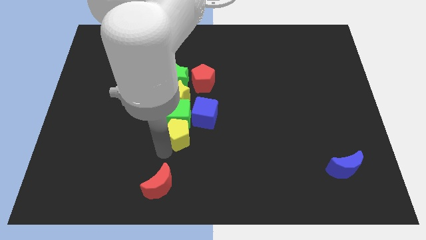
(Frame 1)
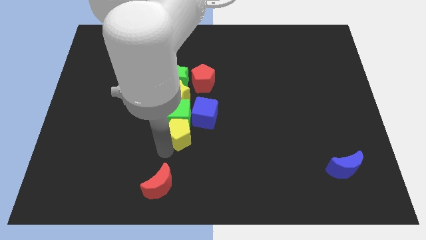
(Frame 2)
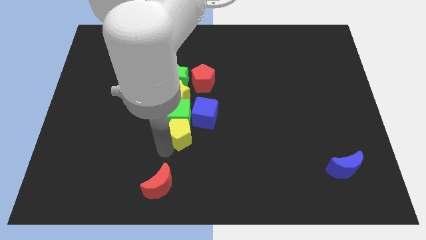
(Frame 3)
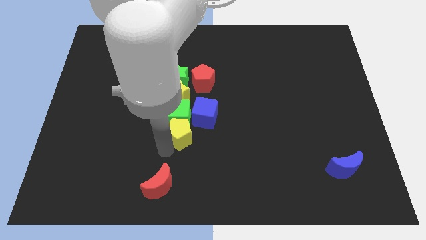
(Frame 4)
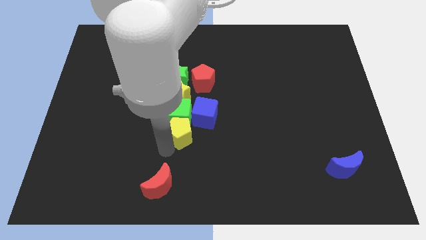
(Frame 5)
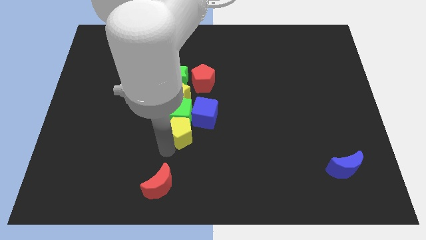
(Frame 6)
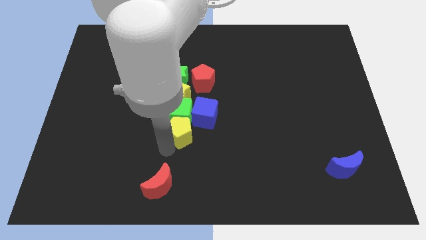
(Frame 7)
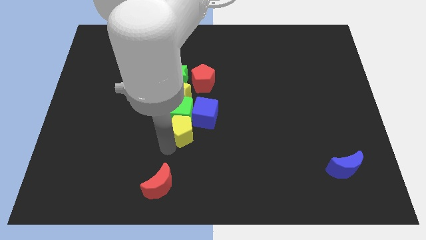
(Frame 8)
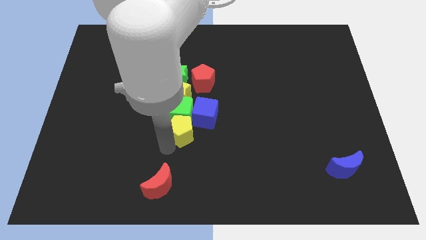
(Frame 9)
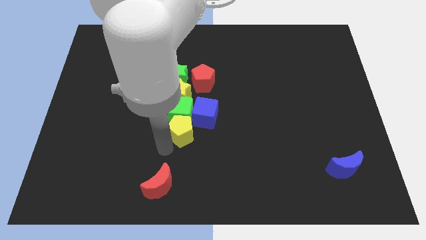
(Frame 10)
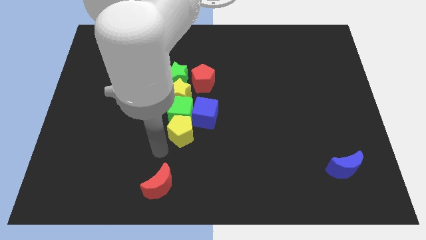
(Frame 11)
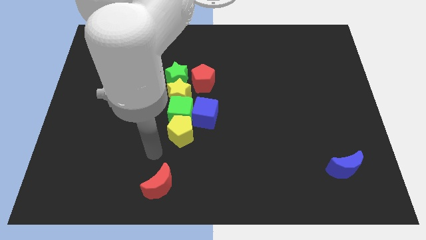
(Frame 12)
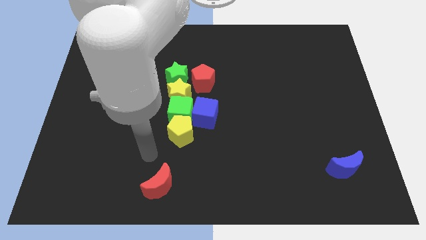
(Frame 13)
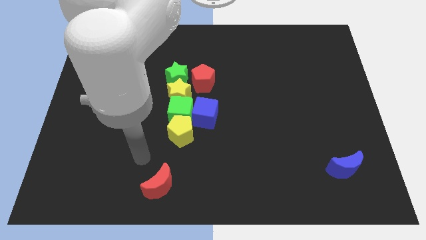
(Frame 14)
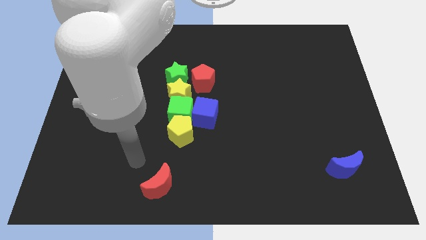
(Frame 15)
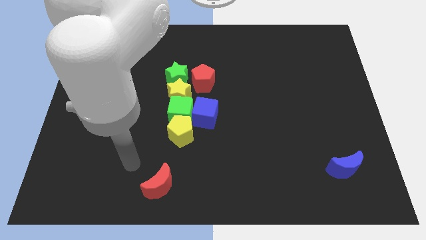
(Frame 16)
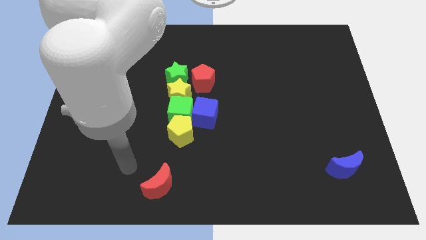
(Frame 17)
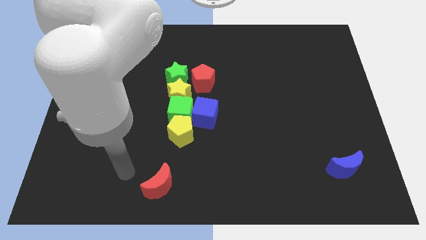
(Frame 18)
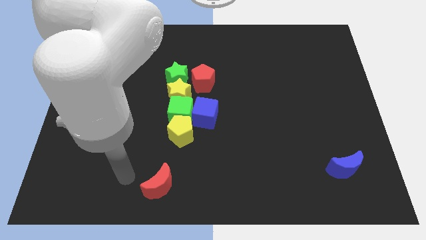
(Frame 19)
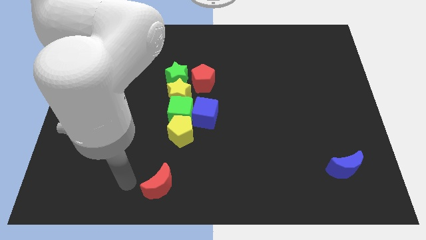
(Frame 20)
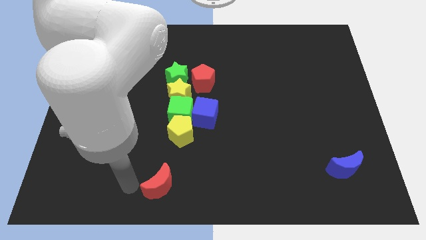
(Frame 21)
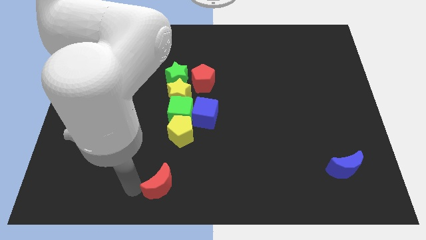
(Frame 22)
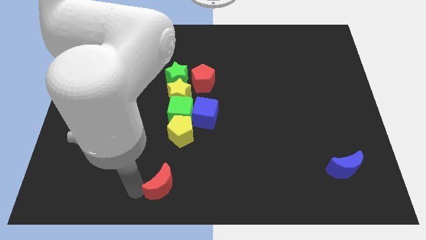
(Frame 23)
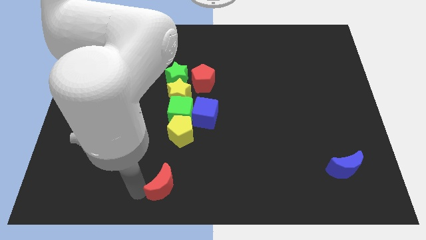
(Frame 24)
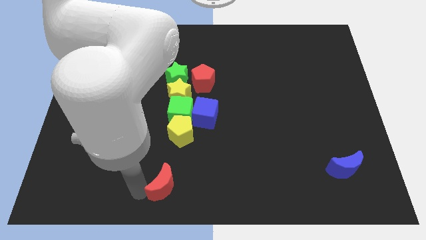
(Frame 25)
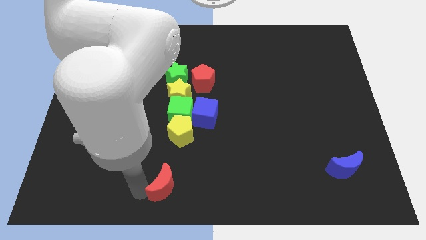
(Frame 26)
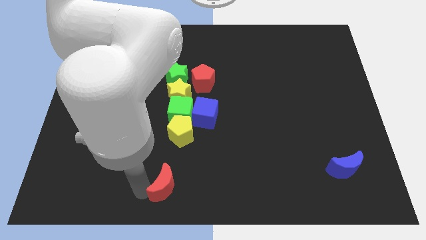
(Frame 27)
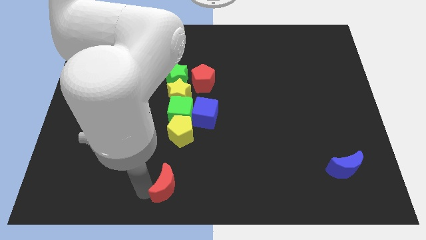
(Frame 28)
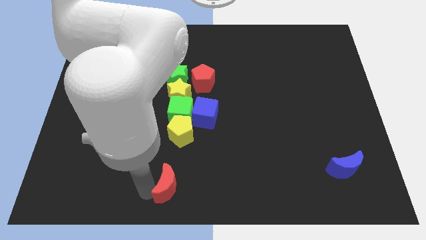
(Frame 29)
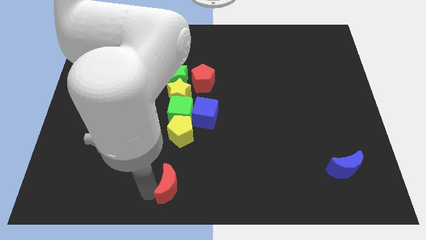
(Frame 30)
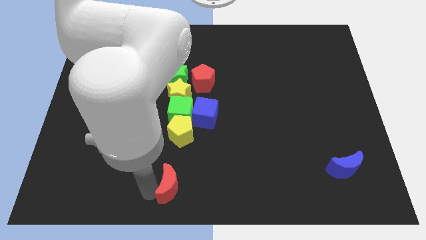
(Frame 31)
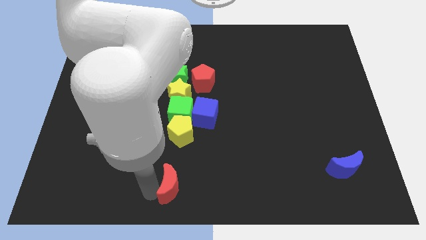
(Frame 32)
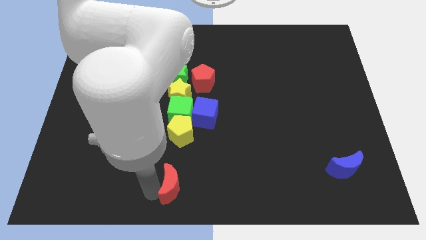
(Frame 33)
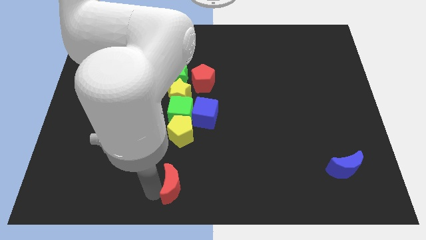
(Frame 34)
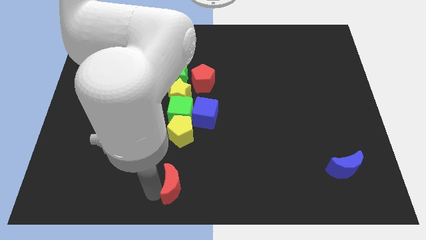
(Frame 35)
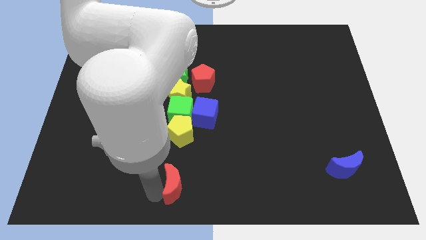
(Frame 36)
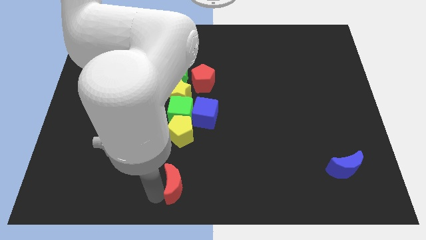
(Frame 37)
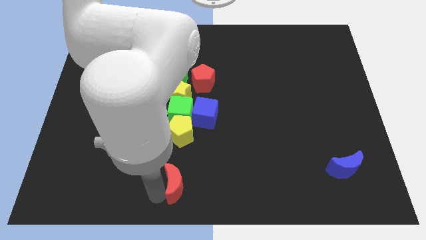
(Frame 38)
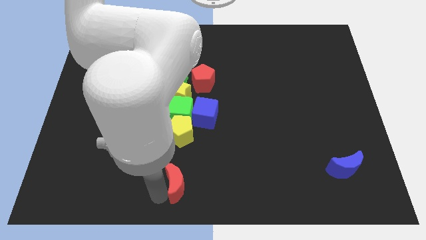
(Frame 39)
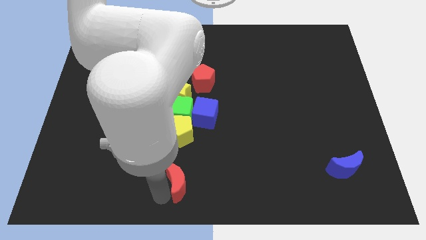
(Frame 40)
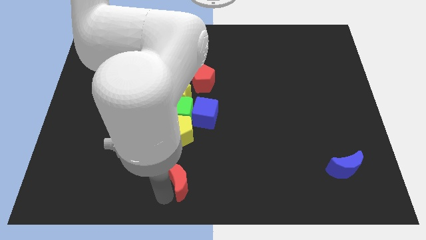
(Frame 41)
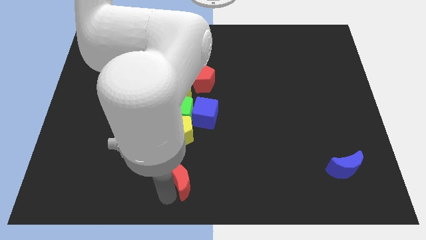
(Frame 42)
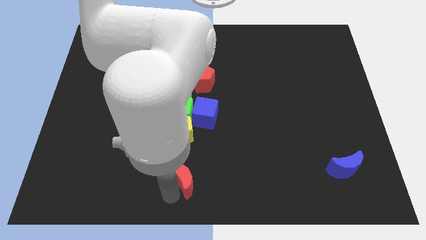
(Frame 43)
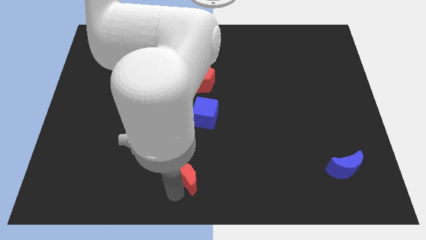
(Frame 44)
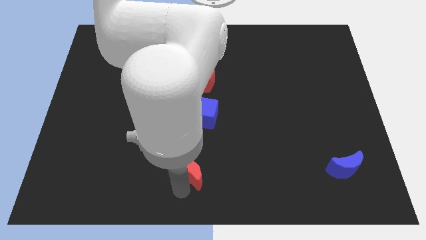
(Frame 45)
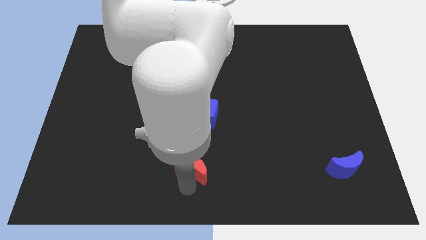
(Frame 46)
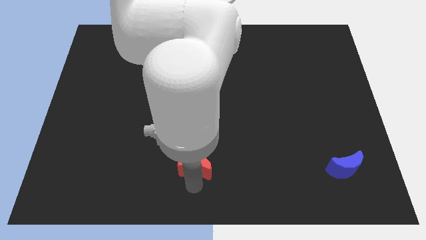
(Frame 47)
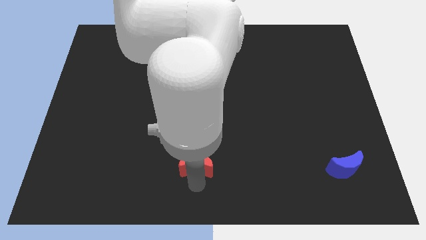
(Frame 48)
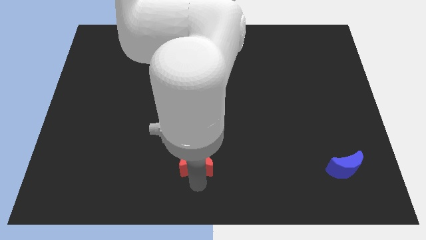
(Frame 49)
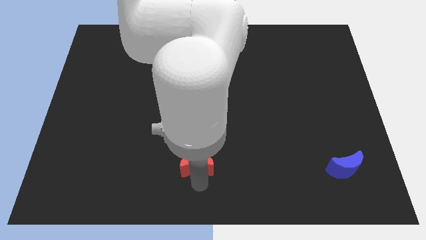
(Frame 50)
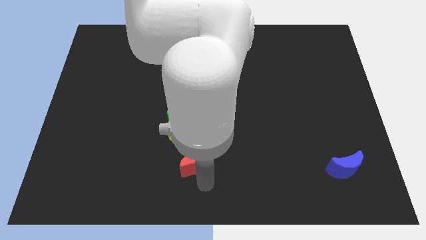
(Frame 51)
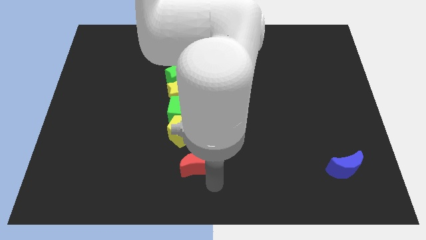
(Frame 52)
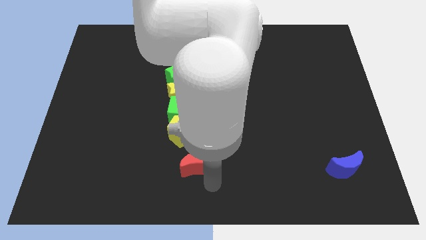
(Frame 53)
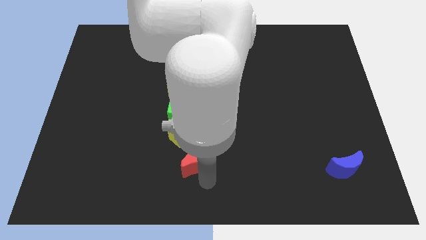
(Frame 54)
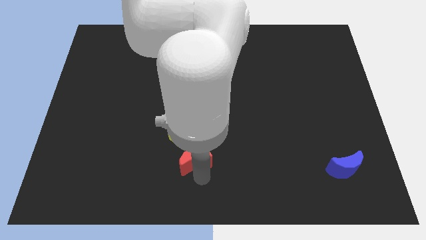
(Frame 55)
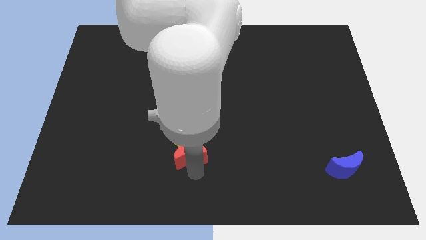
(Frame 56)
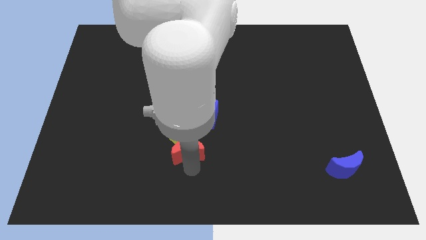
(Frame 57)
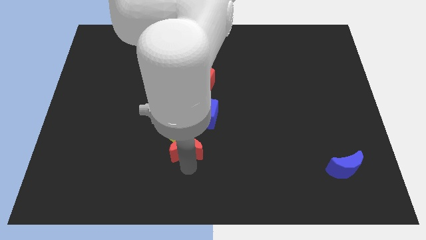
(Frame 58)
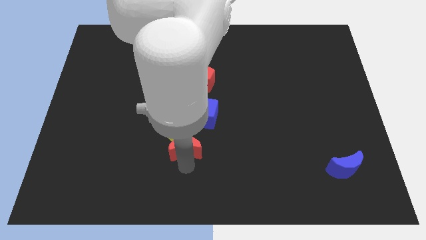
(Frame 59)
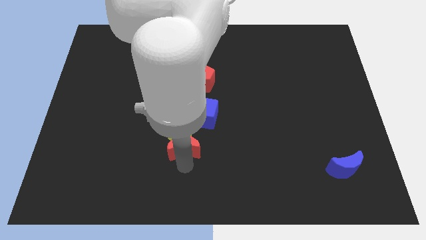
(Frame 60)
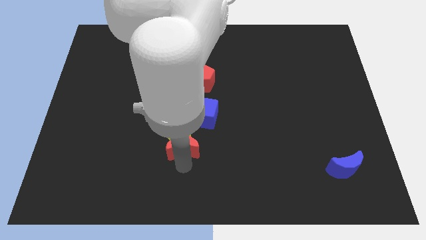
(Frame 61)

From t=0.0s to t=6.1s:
place red moon below yellow pentagon

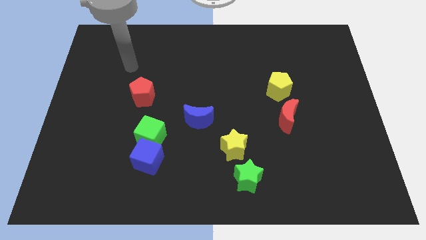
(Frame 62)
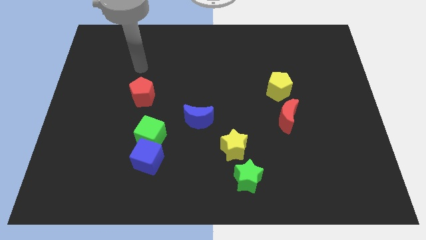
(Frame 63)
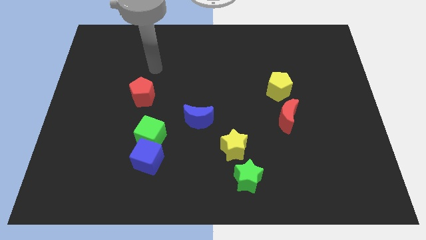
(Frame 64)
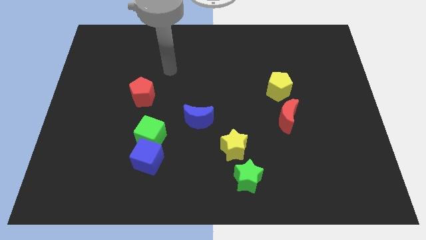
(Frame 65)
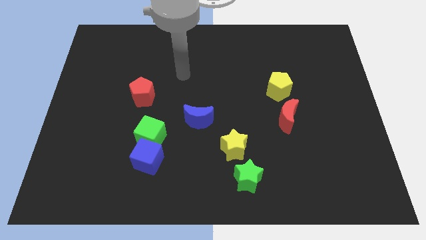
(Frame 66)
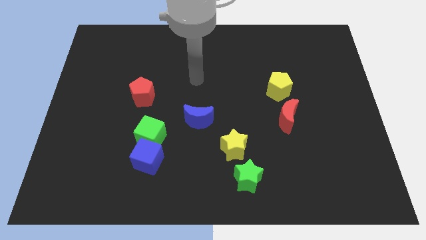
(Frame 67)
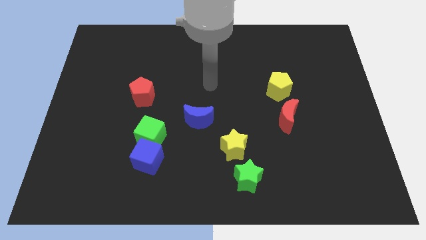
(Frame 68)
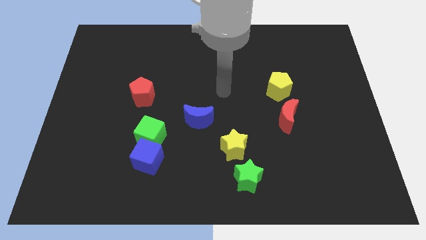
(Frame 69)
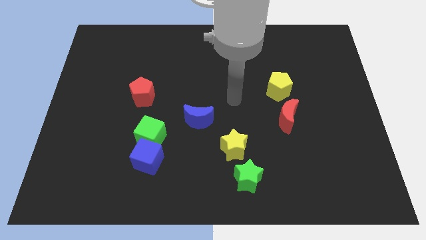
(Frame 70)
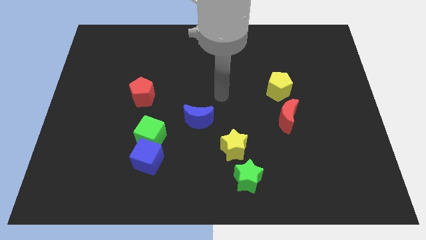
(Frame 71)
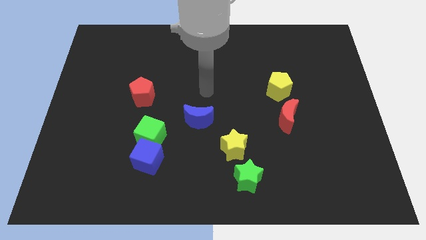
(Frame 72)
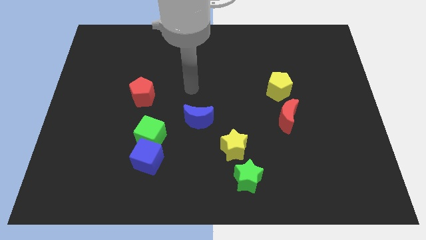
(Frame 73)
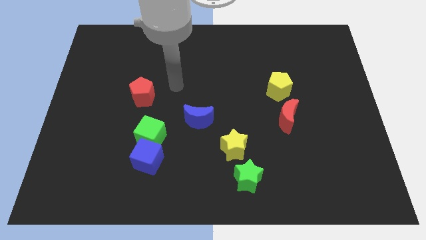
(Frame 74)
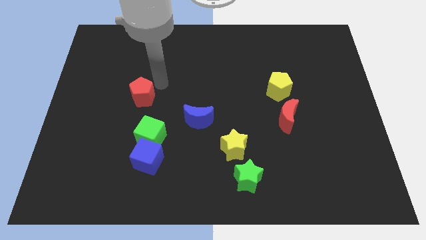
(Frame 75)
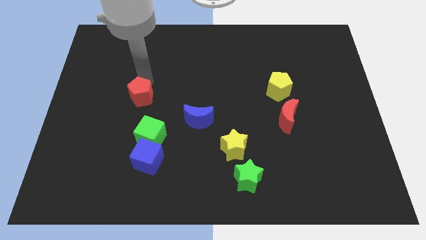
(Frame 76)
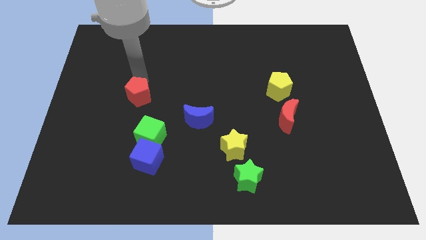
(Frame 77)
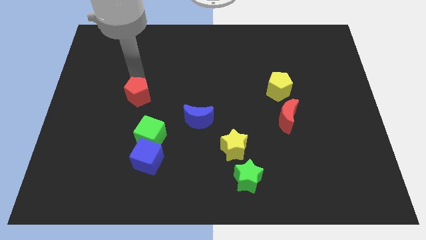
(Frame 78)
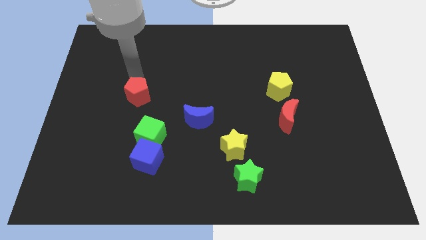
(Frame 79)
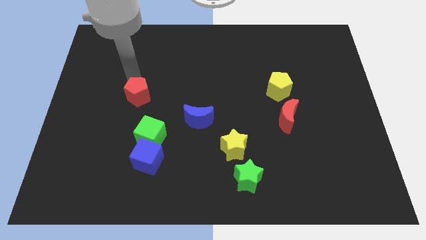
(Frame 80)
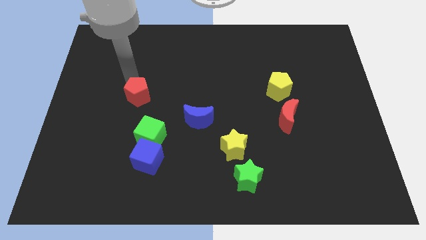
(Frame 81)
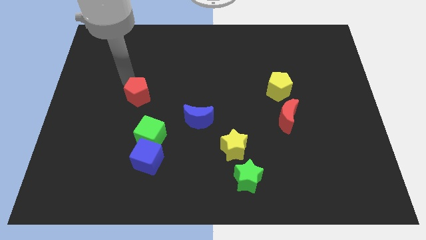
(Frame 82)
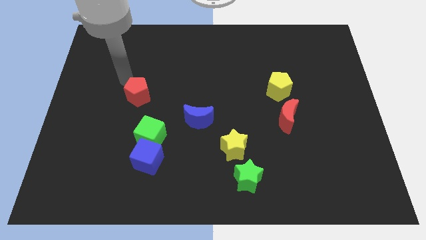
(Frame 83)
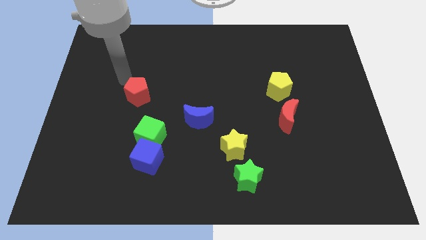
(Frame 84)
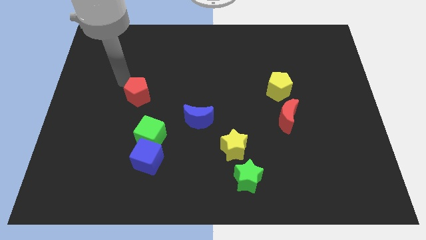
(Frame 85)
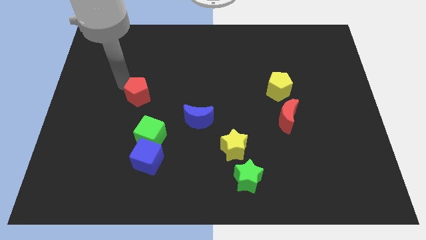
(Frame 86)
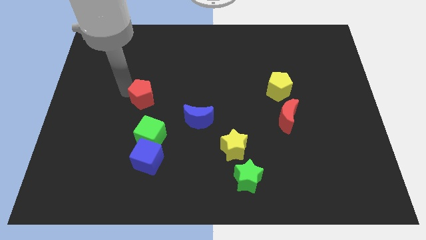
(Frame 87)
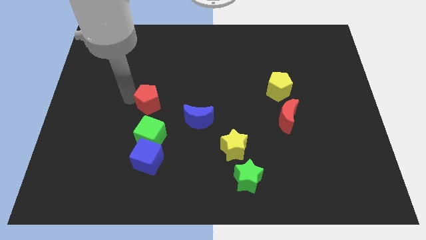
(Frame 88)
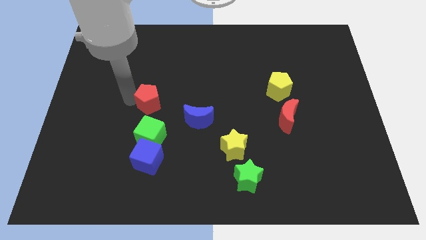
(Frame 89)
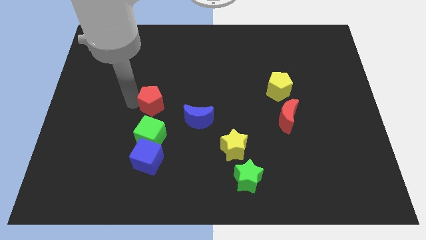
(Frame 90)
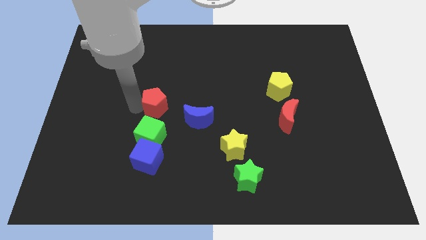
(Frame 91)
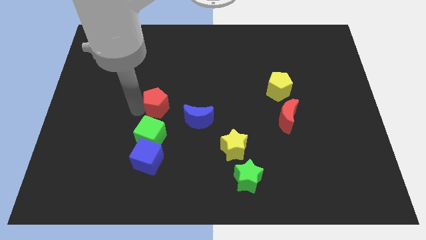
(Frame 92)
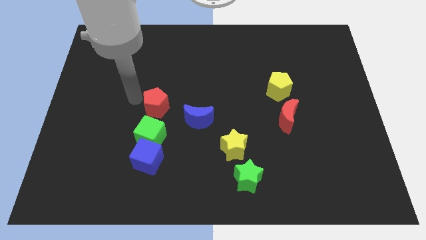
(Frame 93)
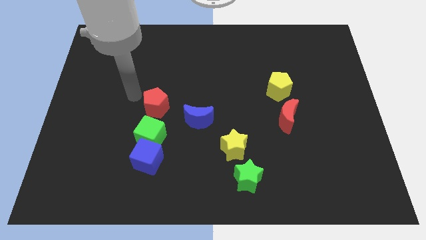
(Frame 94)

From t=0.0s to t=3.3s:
place the red pentagon at the top of green cube
